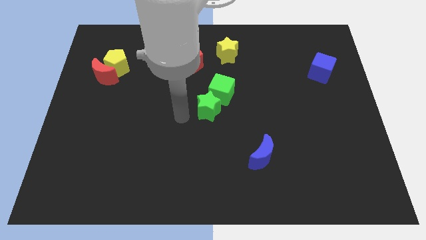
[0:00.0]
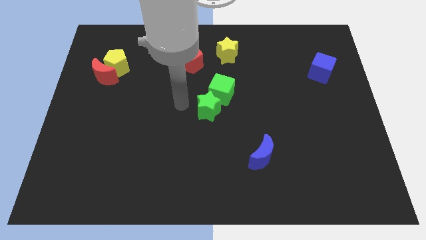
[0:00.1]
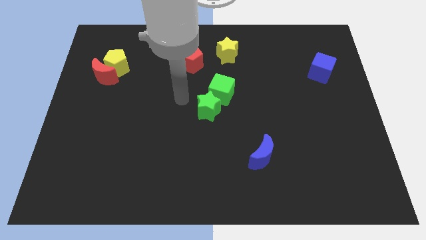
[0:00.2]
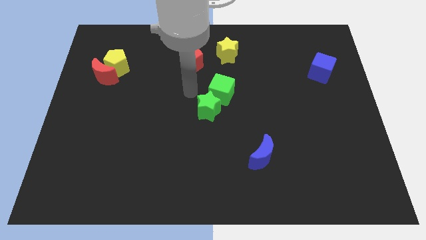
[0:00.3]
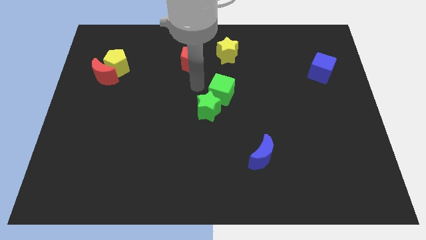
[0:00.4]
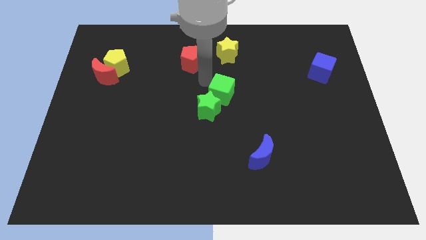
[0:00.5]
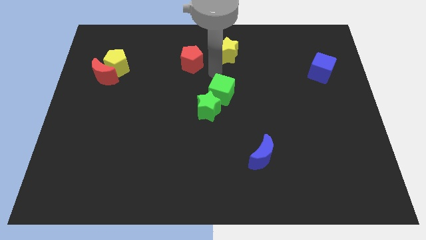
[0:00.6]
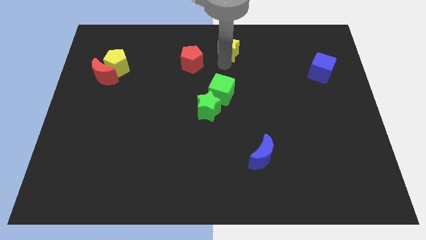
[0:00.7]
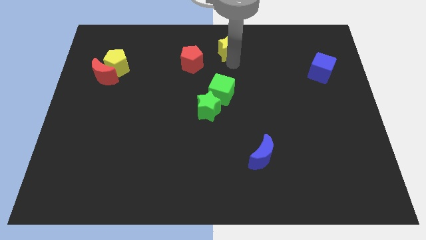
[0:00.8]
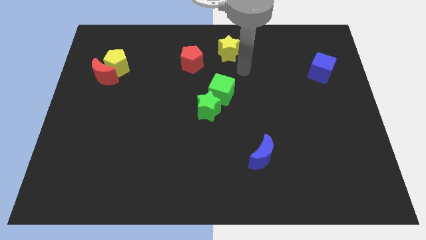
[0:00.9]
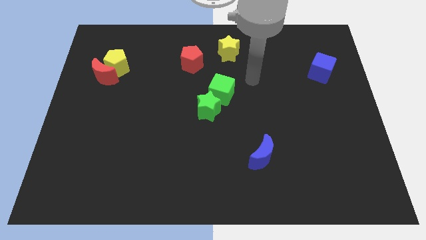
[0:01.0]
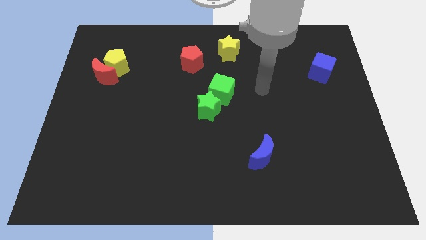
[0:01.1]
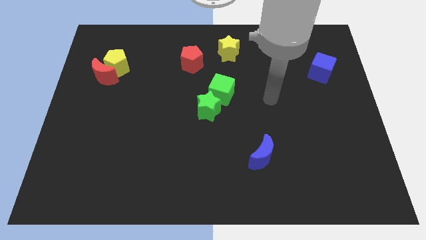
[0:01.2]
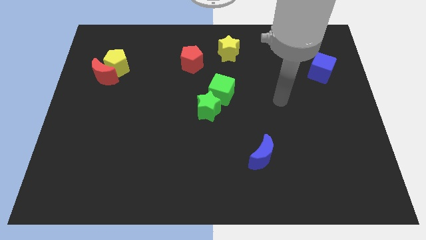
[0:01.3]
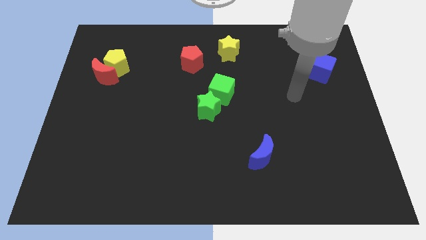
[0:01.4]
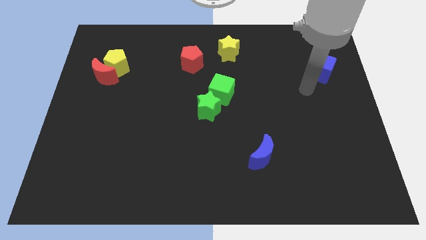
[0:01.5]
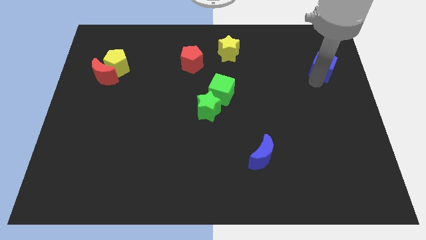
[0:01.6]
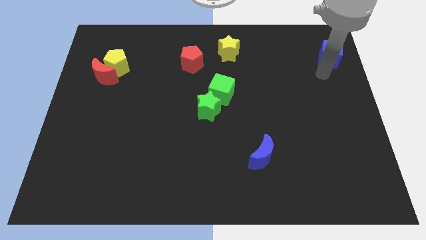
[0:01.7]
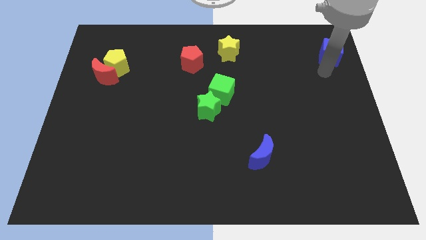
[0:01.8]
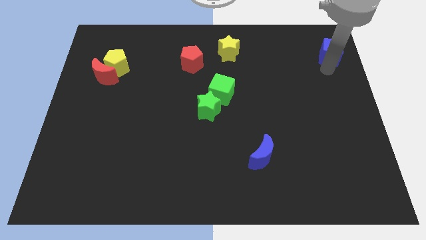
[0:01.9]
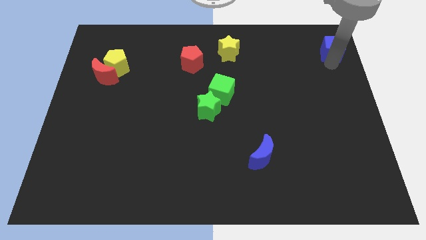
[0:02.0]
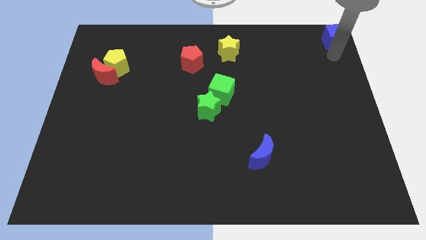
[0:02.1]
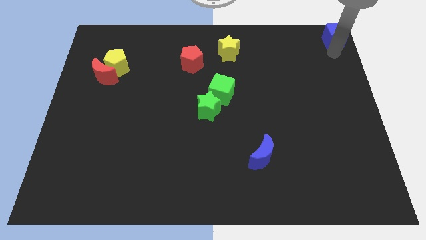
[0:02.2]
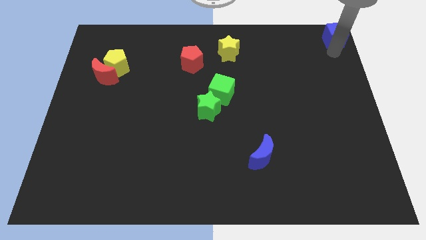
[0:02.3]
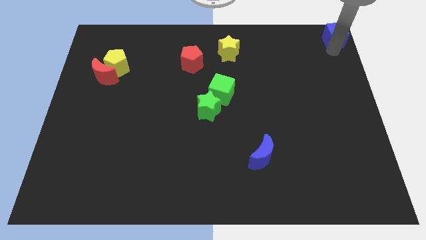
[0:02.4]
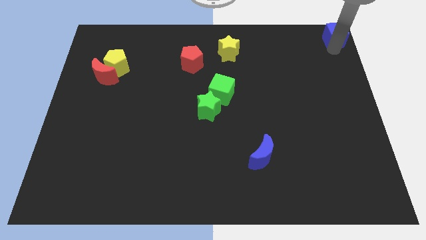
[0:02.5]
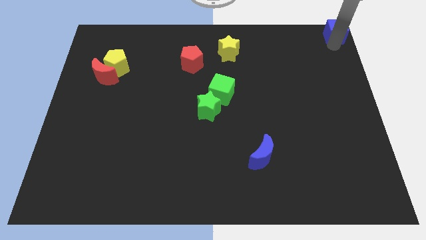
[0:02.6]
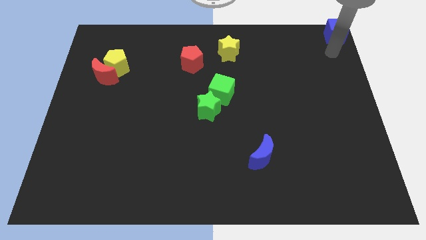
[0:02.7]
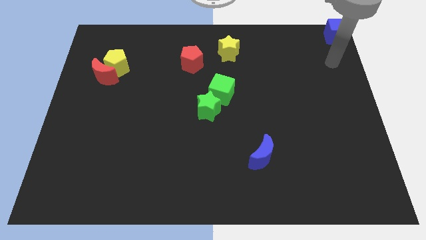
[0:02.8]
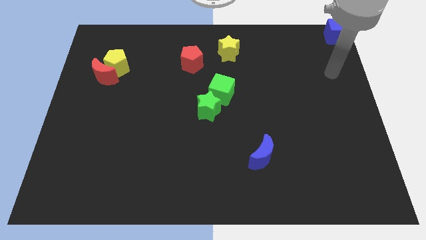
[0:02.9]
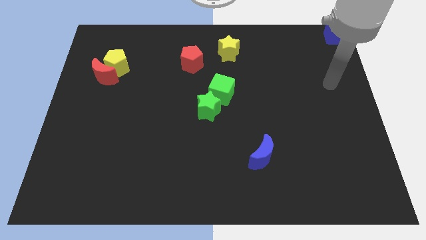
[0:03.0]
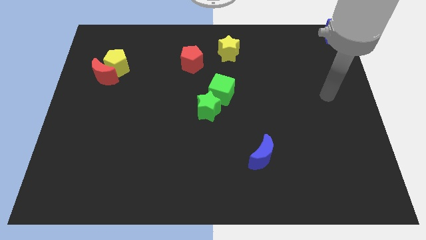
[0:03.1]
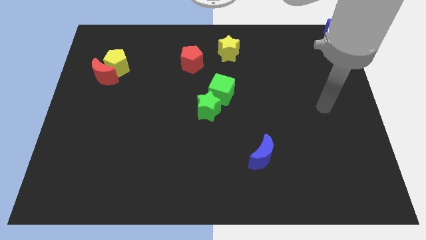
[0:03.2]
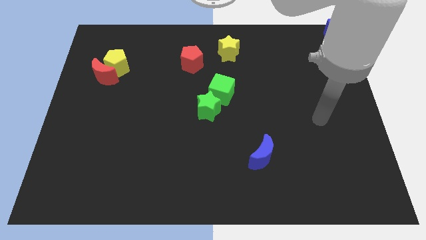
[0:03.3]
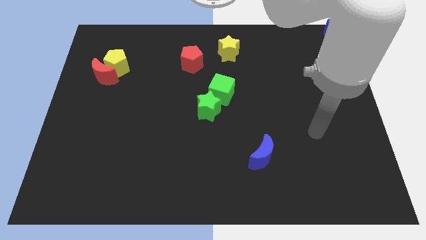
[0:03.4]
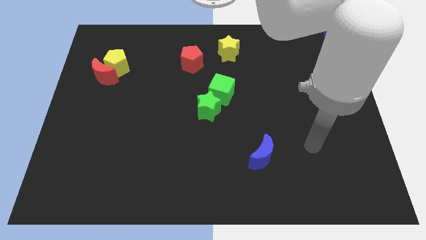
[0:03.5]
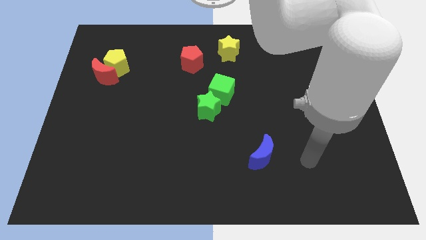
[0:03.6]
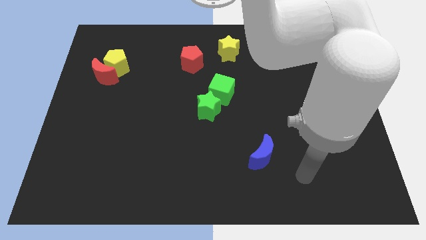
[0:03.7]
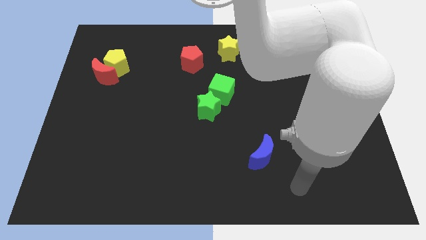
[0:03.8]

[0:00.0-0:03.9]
push blue cube to the right top corner of the board

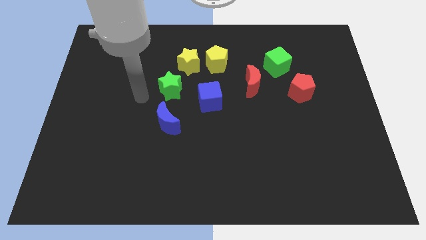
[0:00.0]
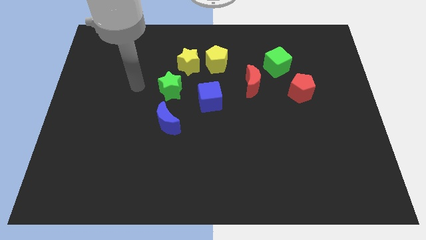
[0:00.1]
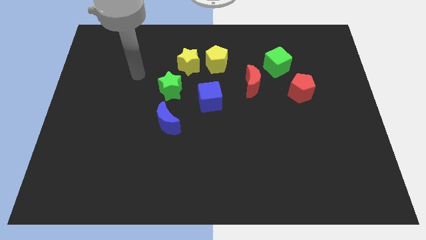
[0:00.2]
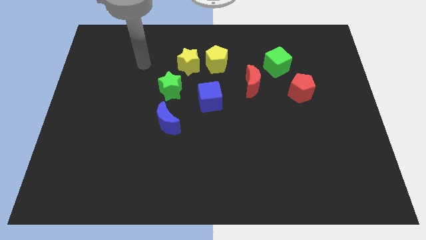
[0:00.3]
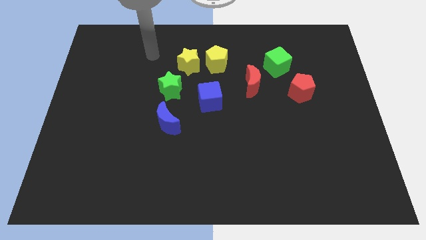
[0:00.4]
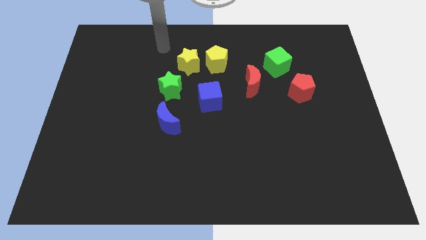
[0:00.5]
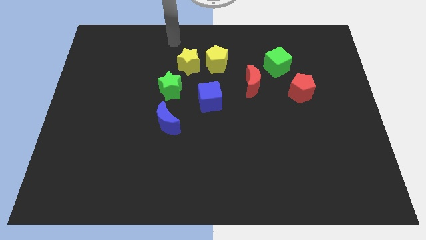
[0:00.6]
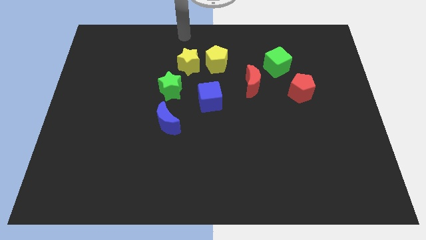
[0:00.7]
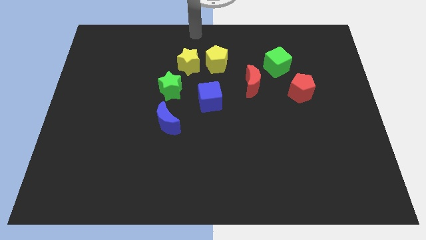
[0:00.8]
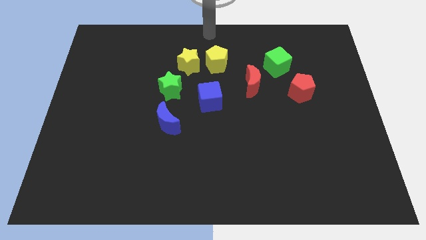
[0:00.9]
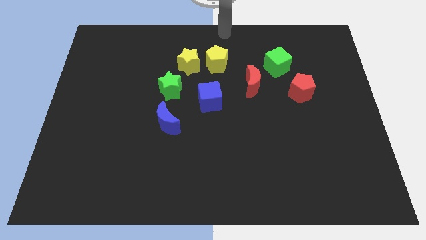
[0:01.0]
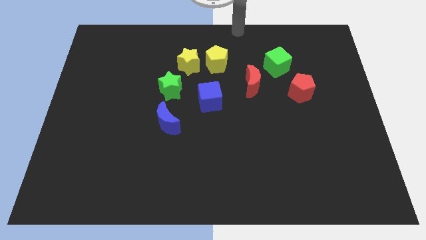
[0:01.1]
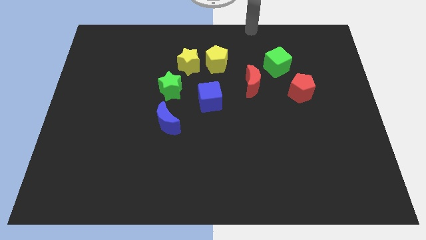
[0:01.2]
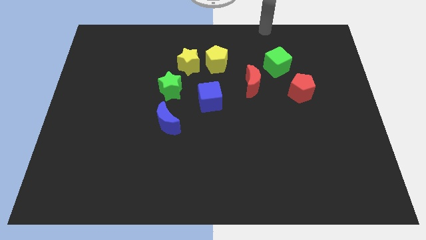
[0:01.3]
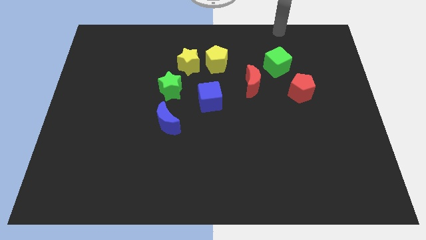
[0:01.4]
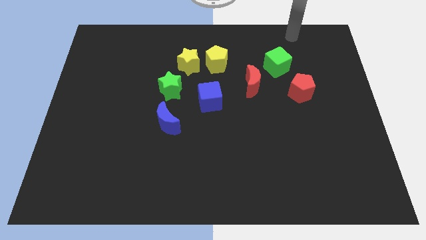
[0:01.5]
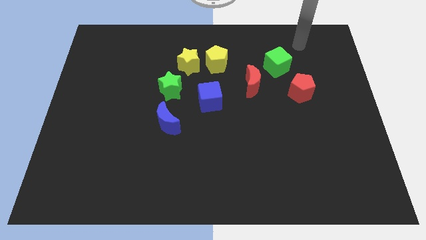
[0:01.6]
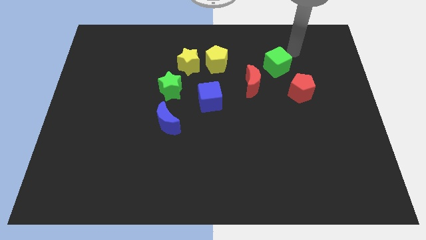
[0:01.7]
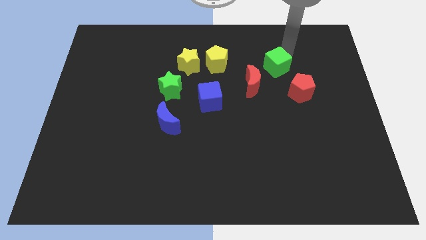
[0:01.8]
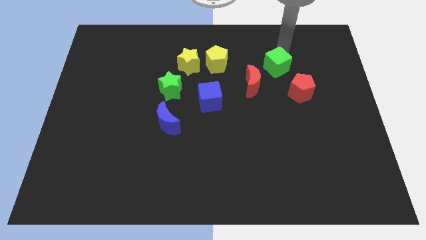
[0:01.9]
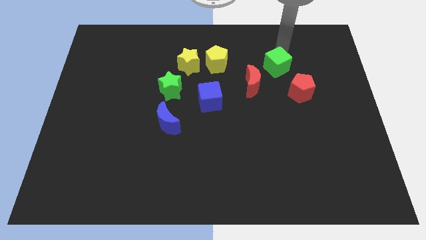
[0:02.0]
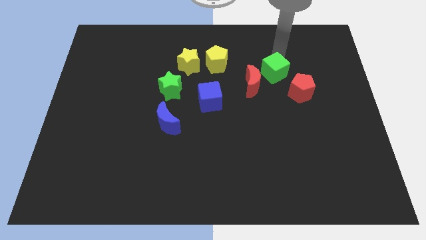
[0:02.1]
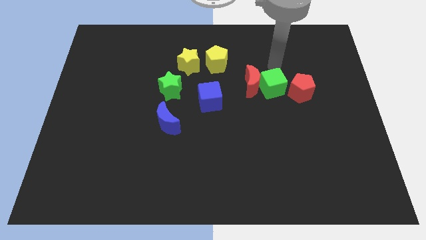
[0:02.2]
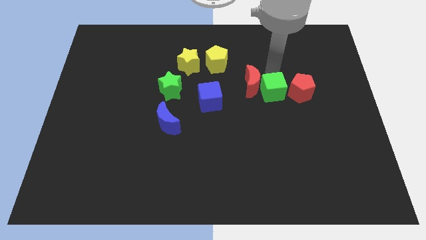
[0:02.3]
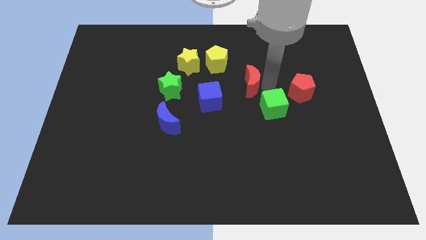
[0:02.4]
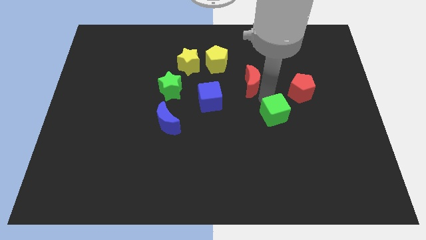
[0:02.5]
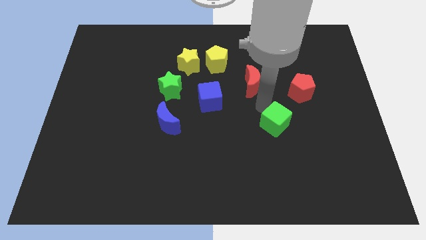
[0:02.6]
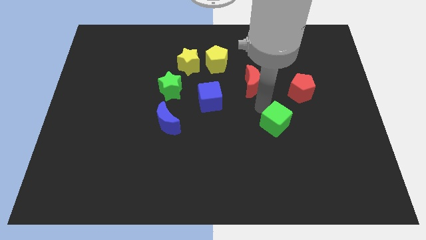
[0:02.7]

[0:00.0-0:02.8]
place the green cube at the bottom left of the red pentagon

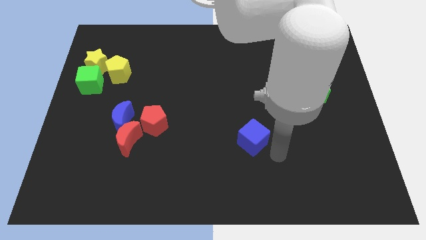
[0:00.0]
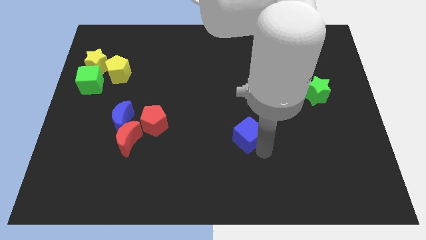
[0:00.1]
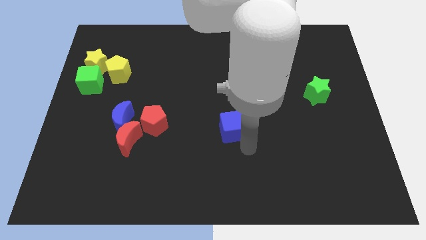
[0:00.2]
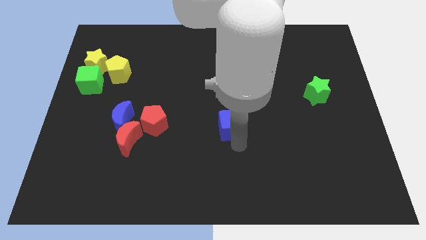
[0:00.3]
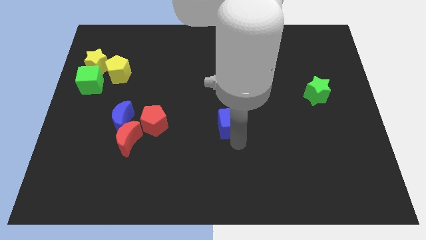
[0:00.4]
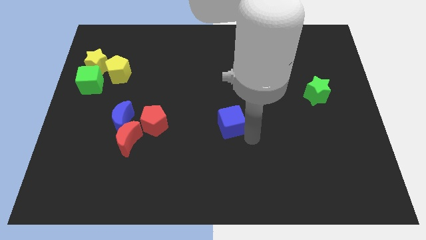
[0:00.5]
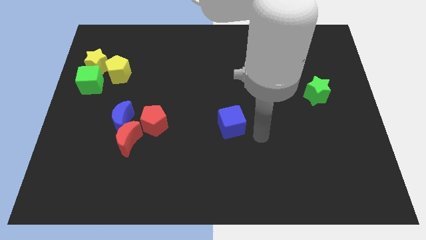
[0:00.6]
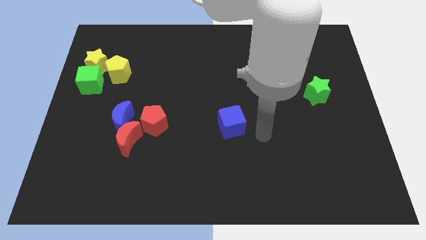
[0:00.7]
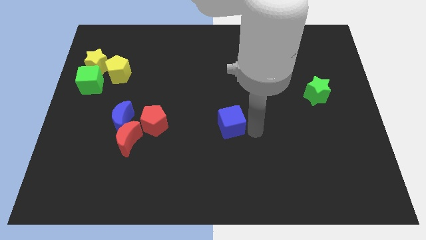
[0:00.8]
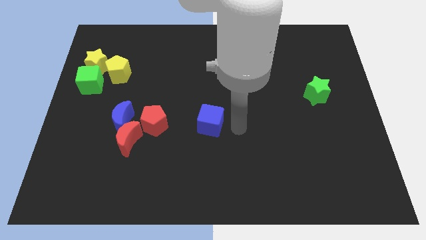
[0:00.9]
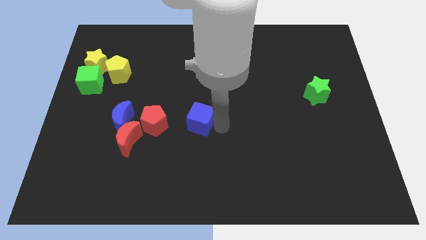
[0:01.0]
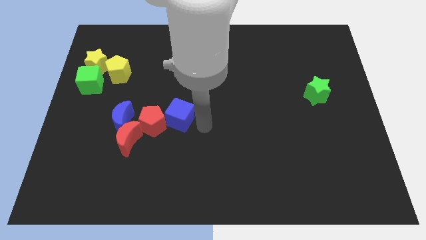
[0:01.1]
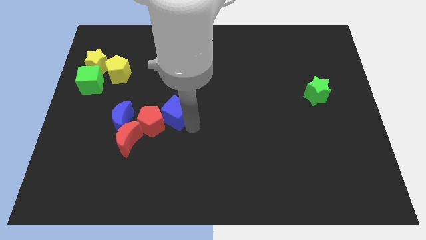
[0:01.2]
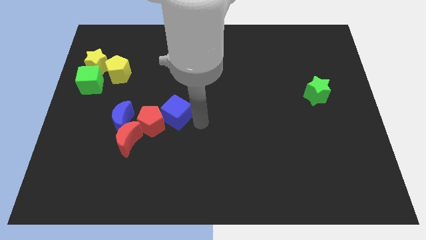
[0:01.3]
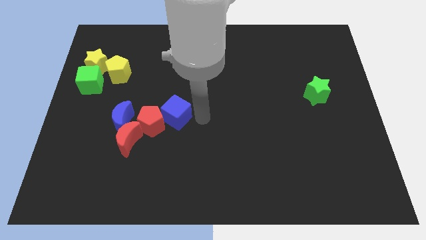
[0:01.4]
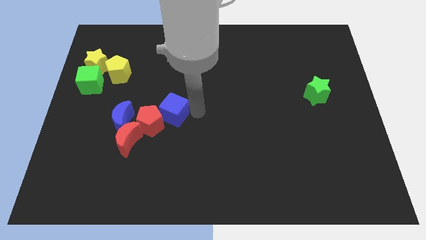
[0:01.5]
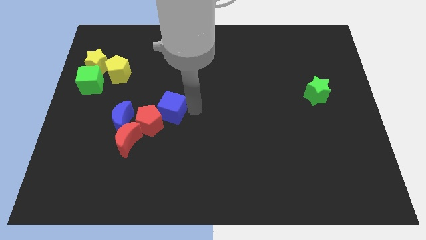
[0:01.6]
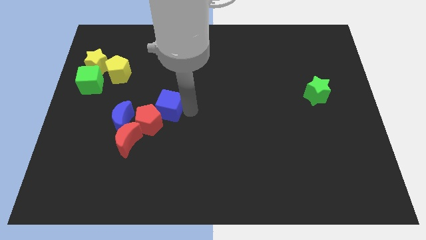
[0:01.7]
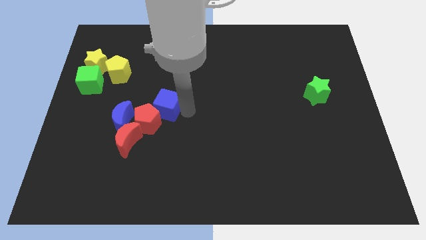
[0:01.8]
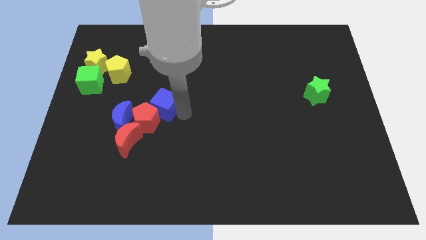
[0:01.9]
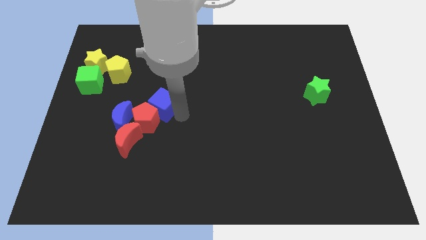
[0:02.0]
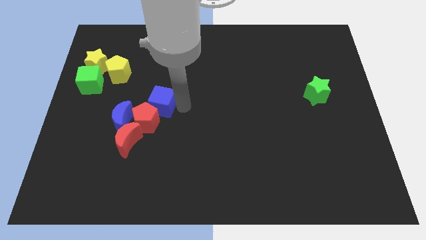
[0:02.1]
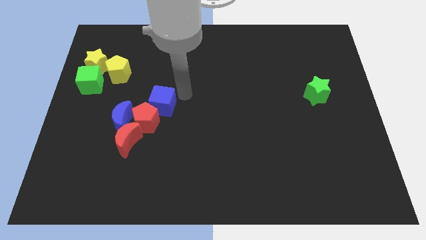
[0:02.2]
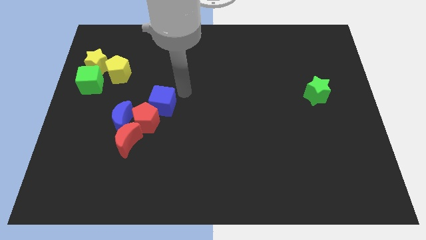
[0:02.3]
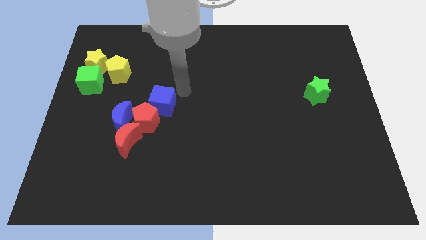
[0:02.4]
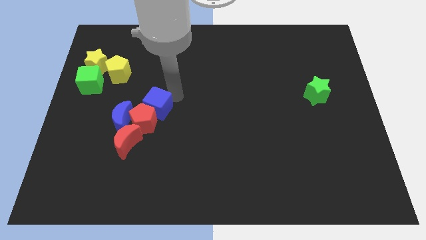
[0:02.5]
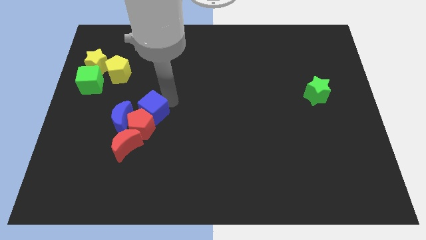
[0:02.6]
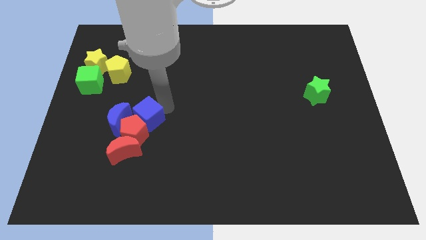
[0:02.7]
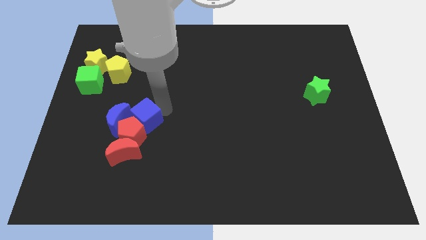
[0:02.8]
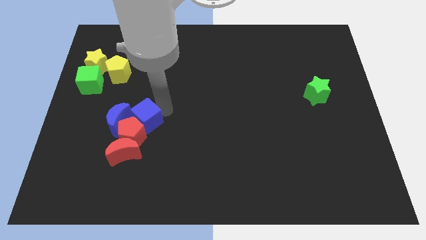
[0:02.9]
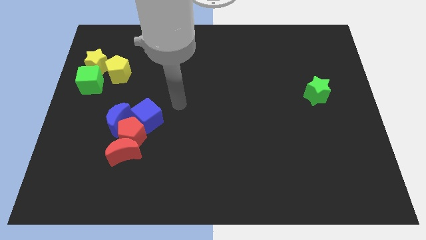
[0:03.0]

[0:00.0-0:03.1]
slide the blue cube into the red pentagon
